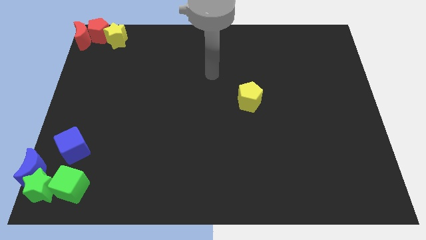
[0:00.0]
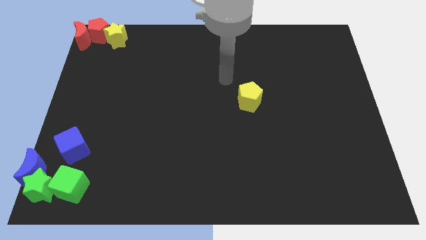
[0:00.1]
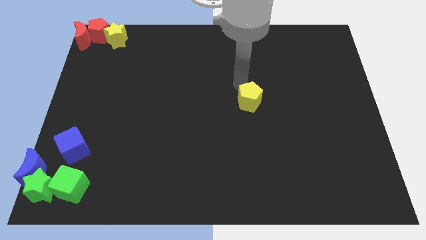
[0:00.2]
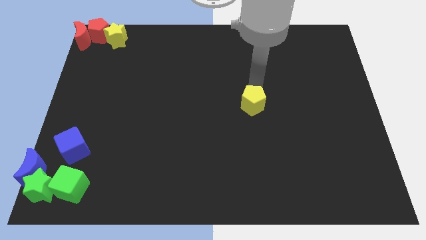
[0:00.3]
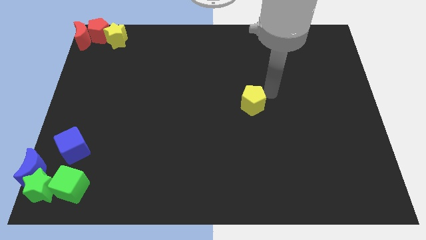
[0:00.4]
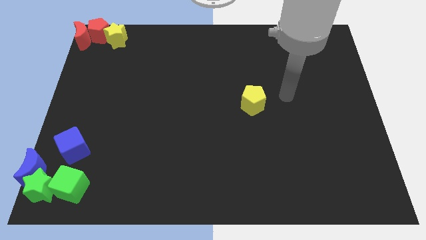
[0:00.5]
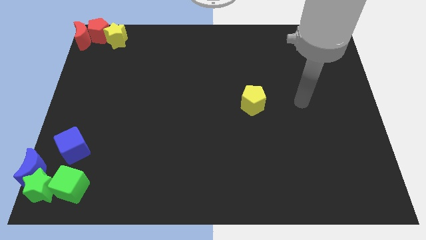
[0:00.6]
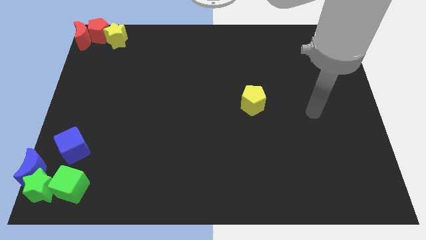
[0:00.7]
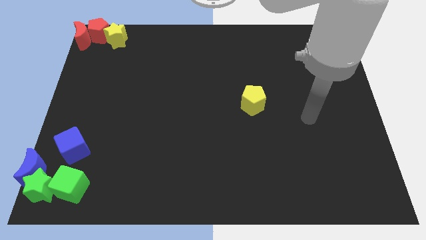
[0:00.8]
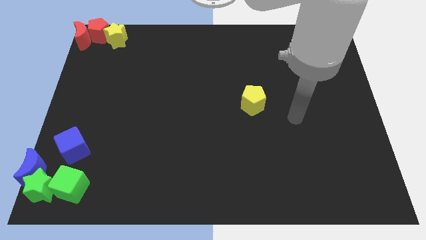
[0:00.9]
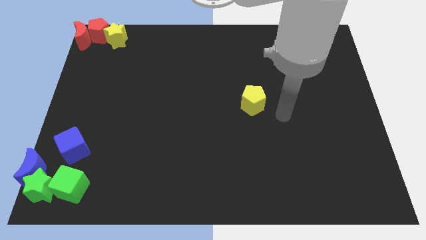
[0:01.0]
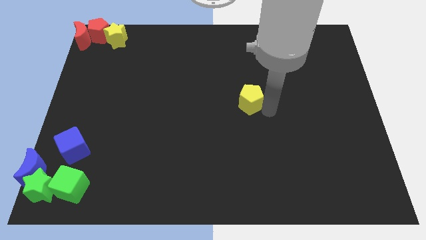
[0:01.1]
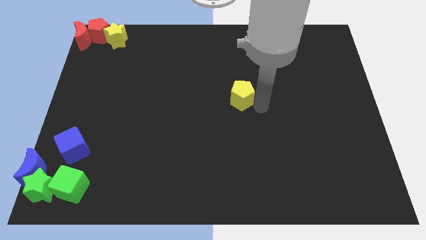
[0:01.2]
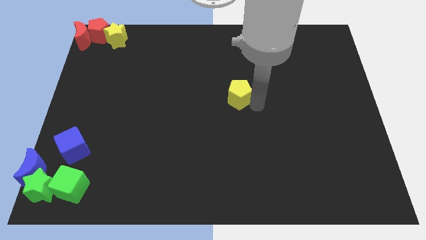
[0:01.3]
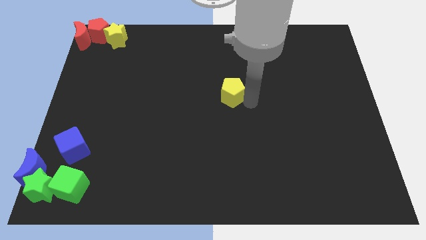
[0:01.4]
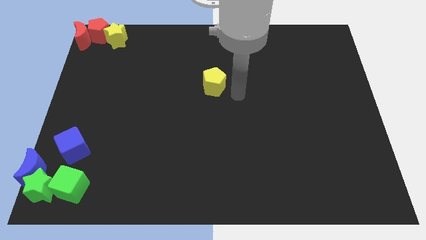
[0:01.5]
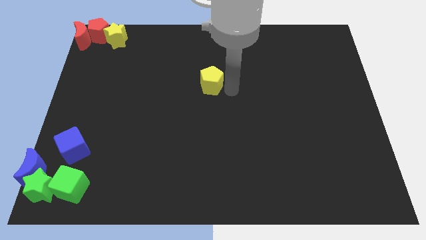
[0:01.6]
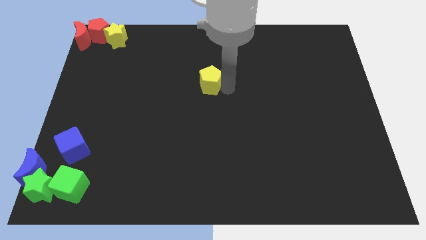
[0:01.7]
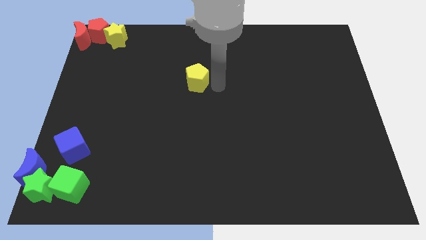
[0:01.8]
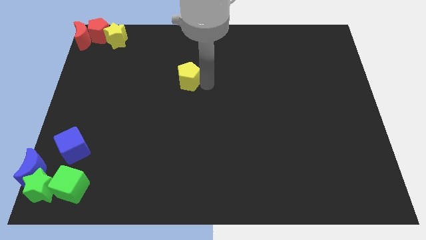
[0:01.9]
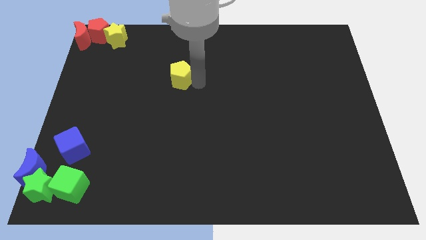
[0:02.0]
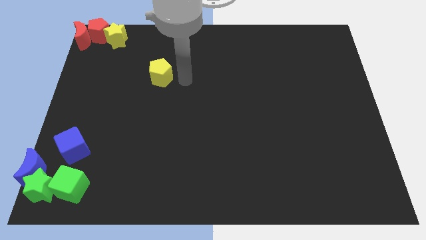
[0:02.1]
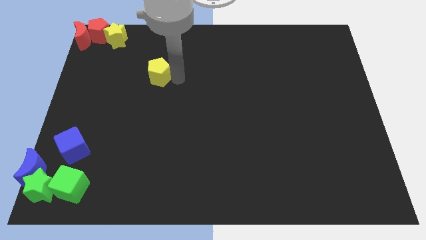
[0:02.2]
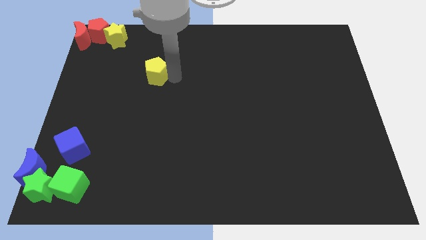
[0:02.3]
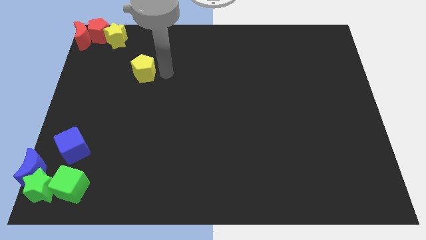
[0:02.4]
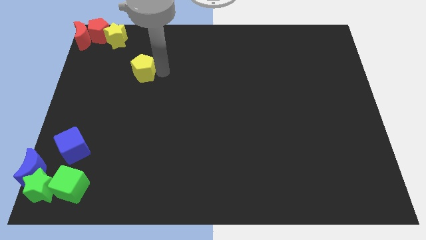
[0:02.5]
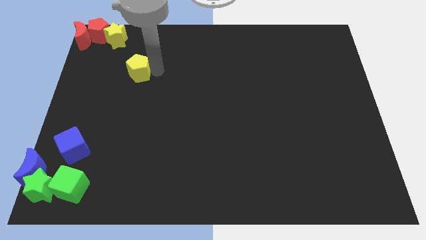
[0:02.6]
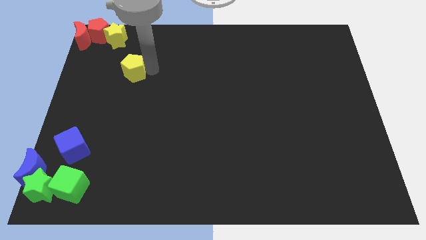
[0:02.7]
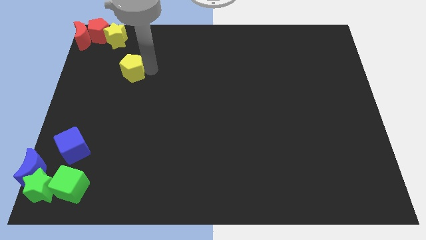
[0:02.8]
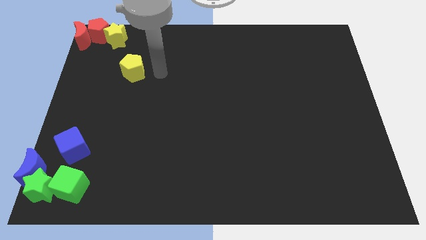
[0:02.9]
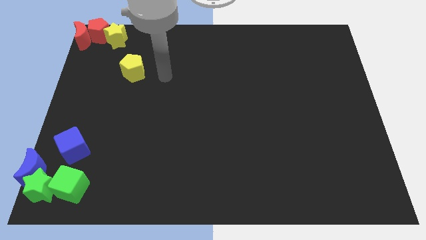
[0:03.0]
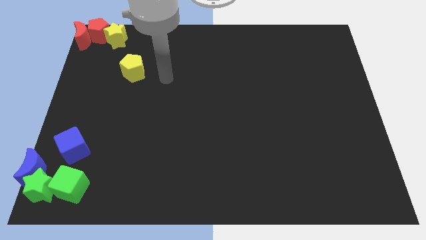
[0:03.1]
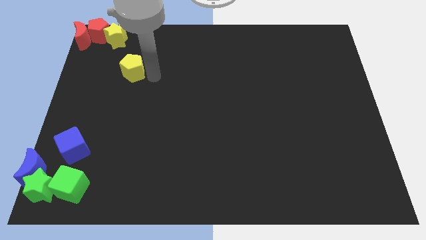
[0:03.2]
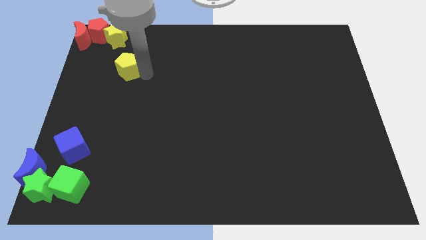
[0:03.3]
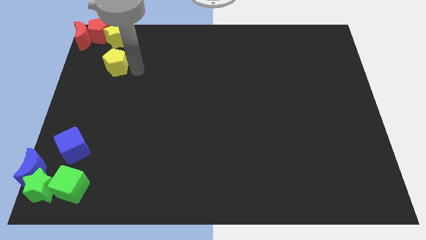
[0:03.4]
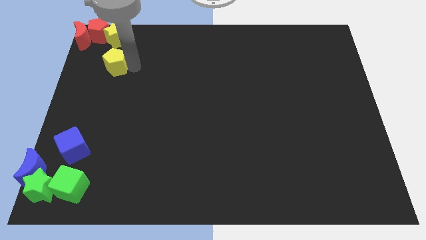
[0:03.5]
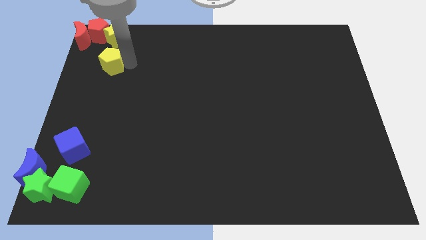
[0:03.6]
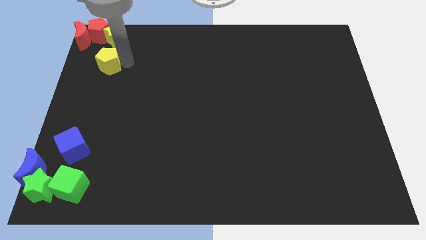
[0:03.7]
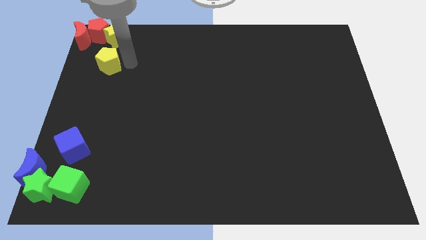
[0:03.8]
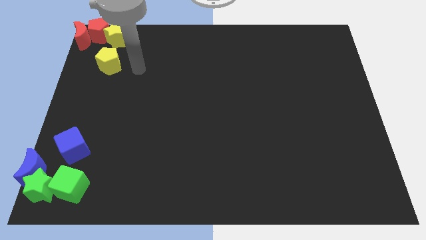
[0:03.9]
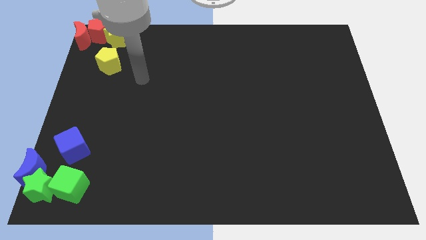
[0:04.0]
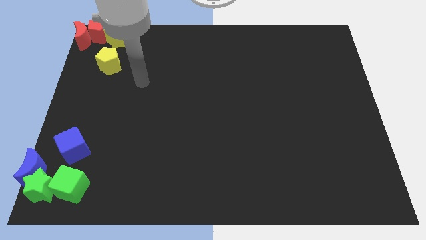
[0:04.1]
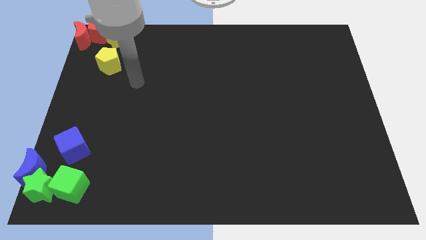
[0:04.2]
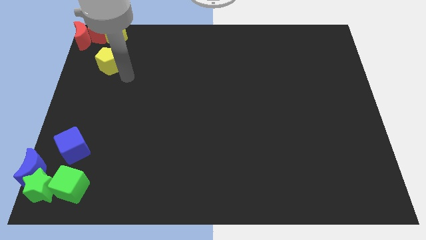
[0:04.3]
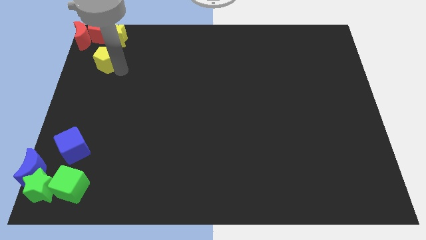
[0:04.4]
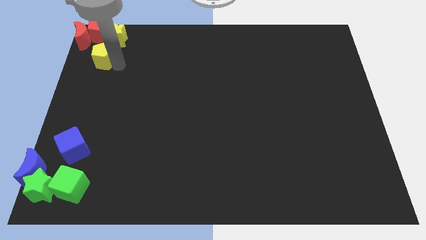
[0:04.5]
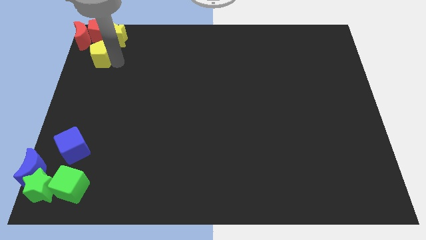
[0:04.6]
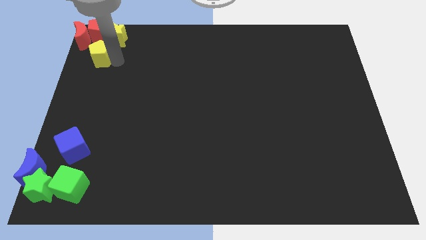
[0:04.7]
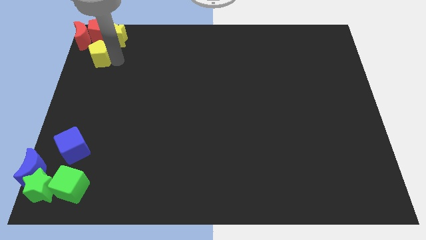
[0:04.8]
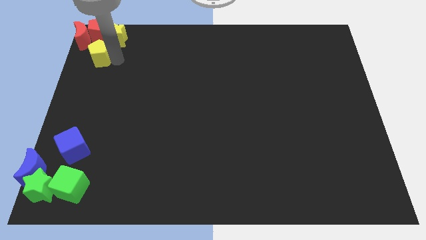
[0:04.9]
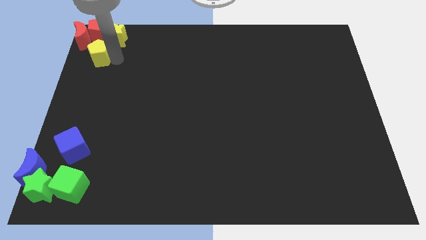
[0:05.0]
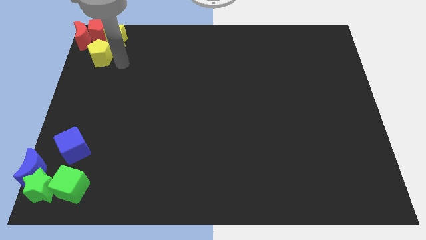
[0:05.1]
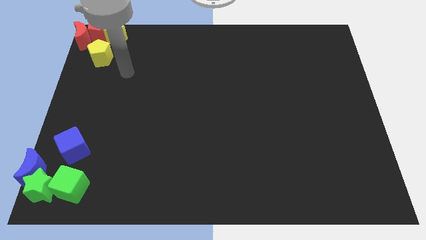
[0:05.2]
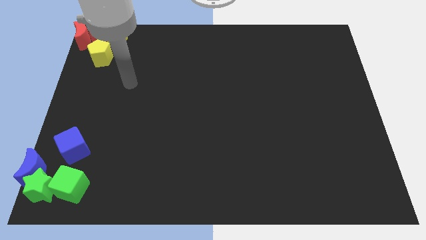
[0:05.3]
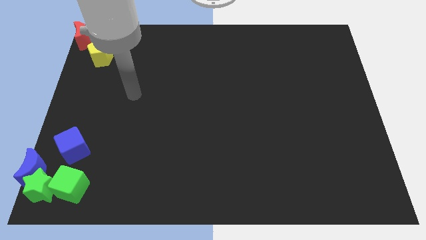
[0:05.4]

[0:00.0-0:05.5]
push the yellow pentagon to the bottom side of the red pentagon

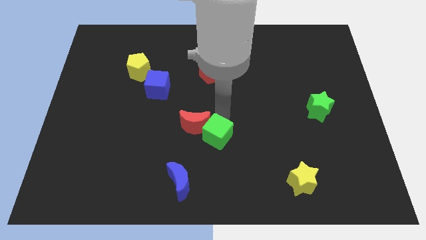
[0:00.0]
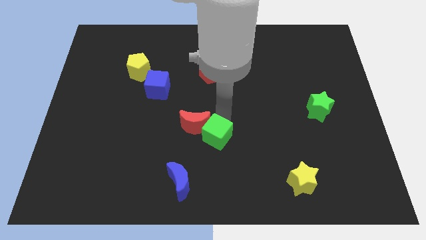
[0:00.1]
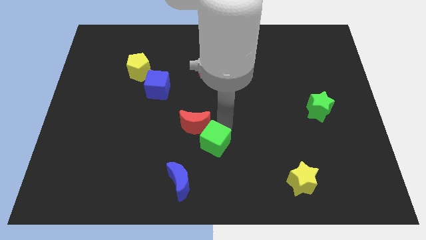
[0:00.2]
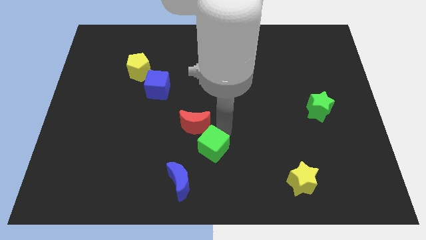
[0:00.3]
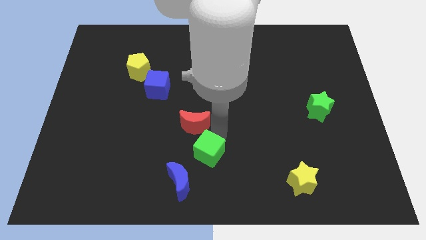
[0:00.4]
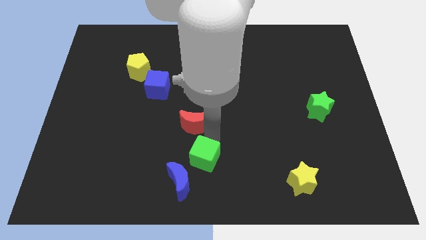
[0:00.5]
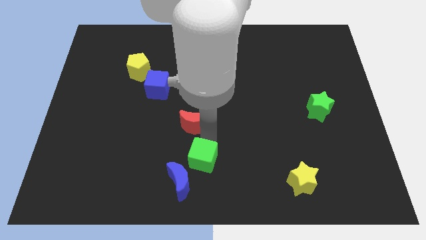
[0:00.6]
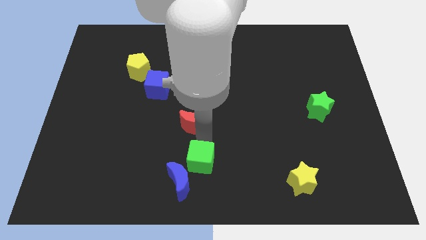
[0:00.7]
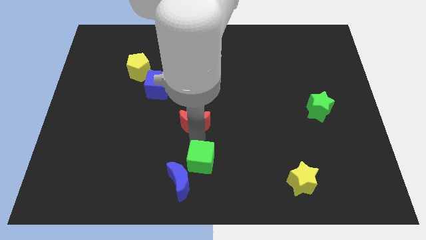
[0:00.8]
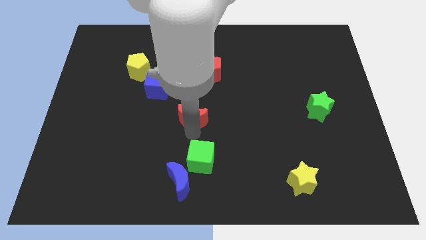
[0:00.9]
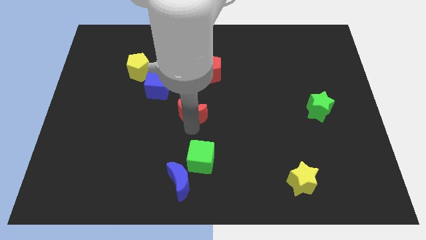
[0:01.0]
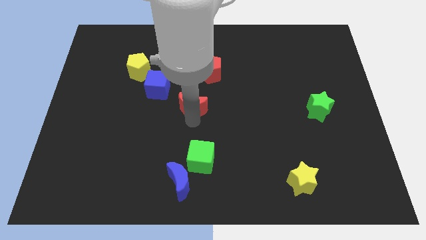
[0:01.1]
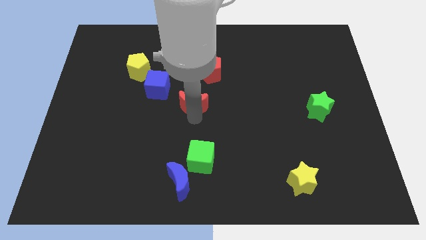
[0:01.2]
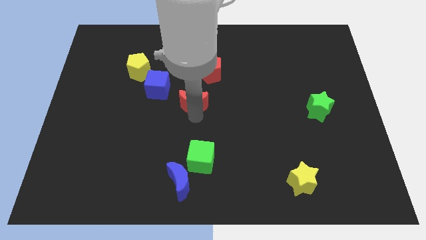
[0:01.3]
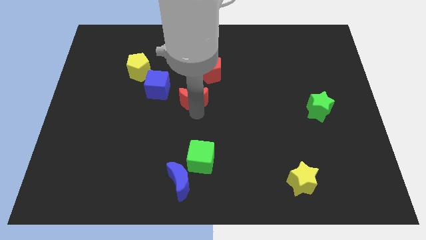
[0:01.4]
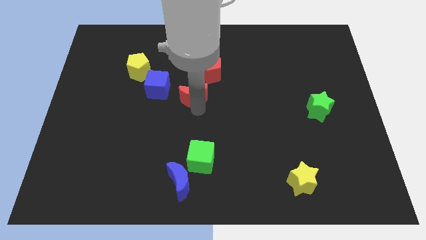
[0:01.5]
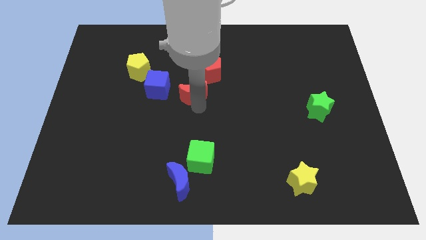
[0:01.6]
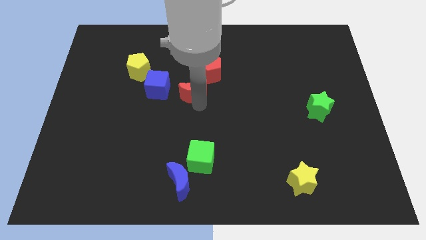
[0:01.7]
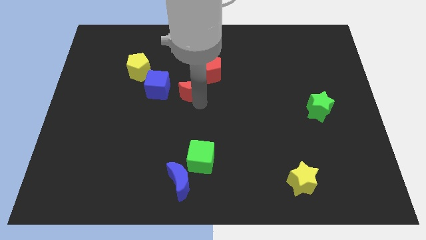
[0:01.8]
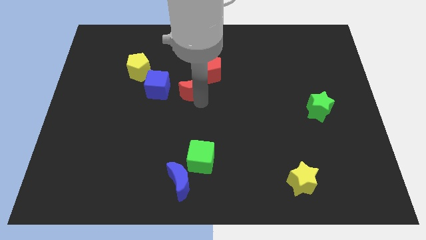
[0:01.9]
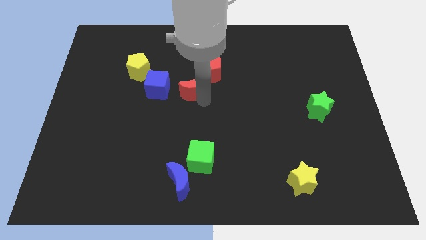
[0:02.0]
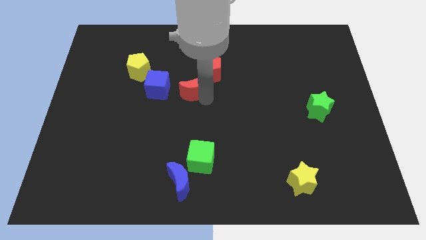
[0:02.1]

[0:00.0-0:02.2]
push red crescent upwards behind the red pentagon

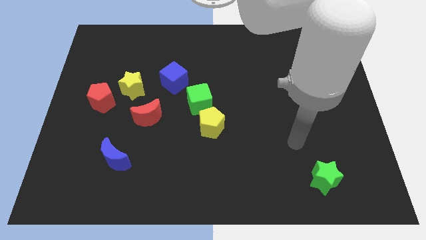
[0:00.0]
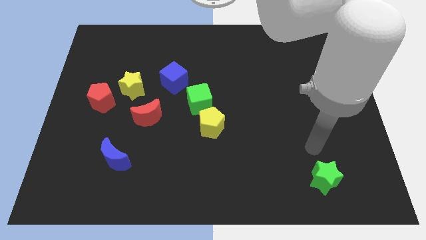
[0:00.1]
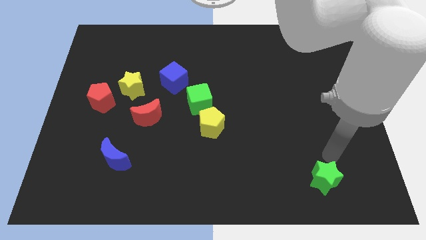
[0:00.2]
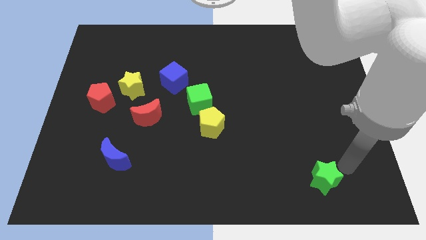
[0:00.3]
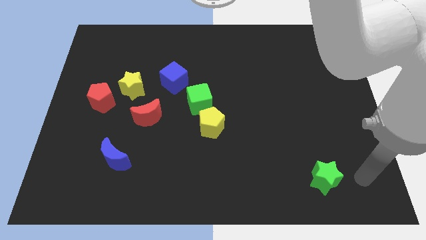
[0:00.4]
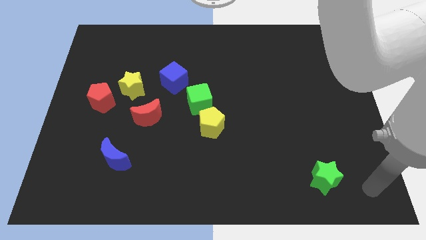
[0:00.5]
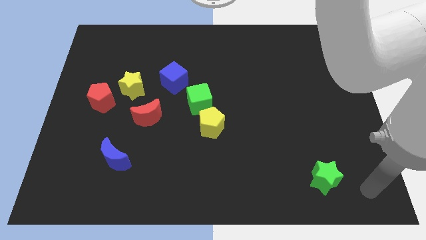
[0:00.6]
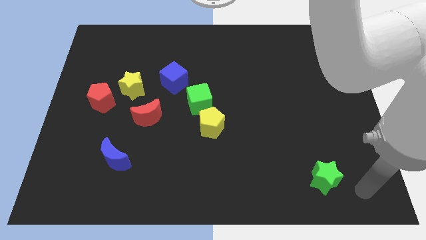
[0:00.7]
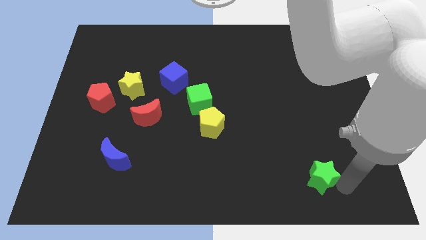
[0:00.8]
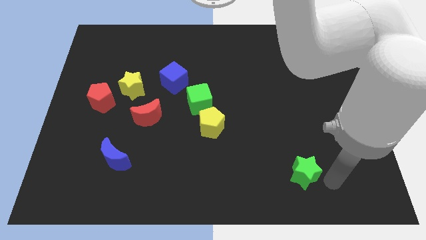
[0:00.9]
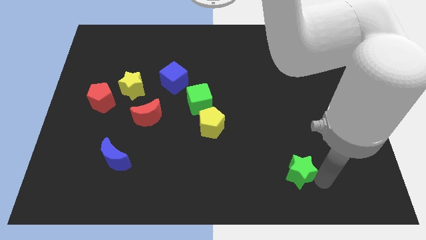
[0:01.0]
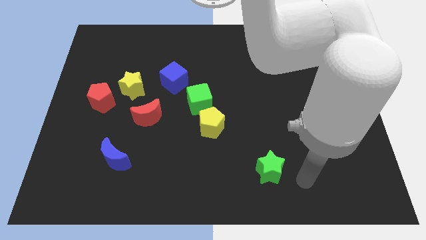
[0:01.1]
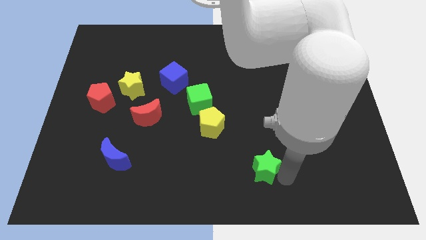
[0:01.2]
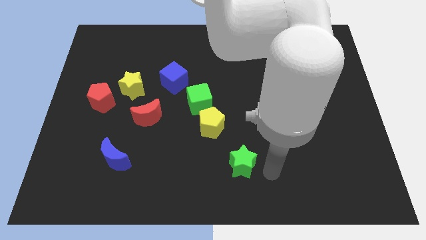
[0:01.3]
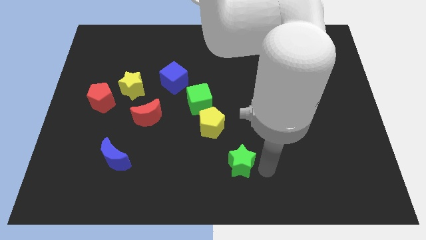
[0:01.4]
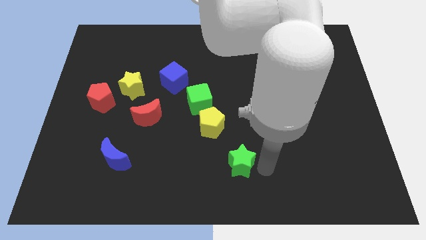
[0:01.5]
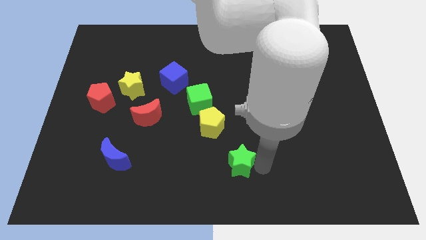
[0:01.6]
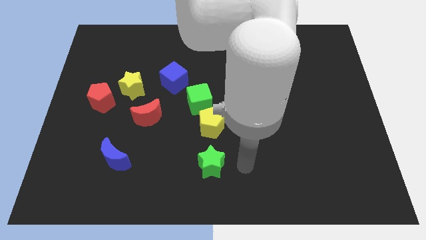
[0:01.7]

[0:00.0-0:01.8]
move the green star towards bottom of yellow pentagon
